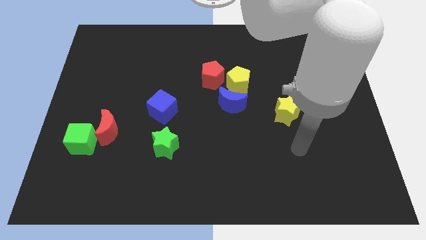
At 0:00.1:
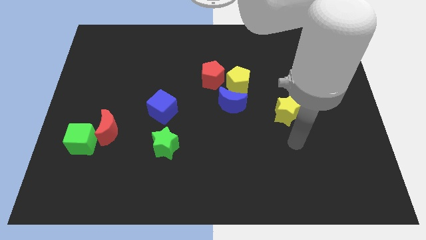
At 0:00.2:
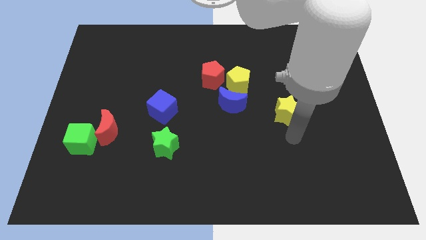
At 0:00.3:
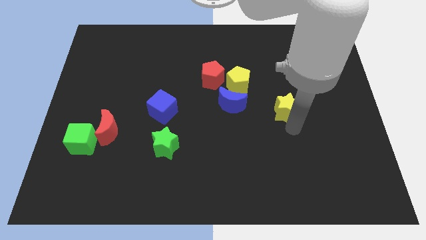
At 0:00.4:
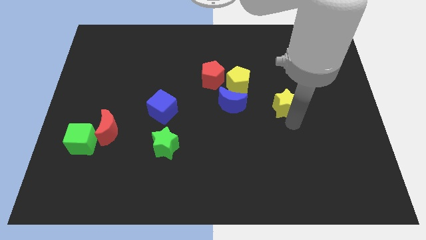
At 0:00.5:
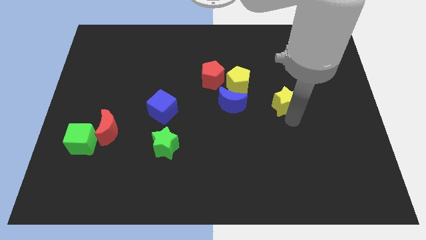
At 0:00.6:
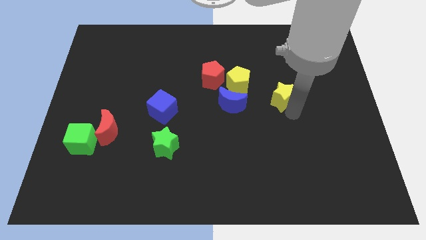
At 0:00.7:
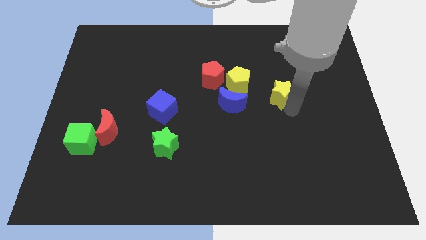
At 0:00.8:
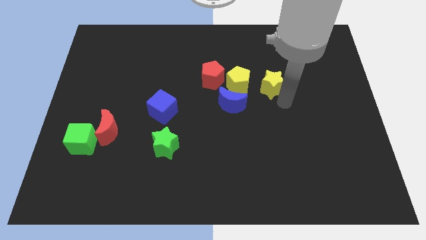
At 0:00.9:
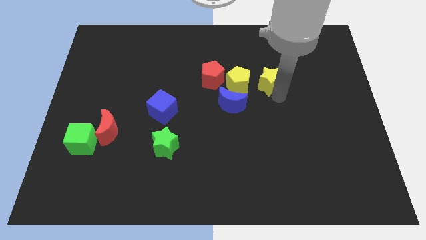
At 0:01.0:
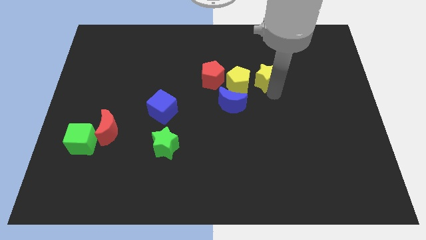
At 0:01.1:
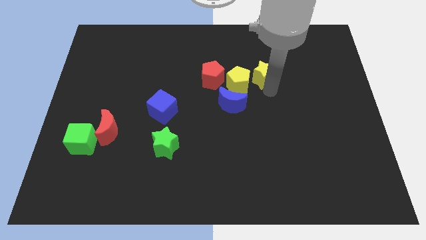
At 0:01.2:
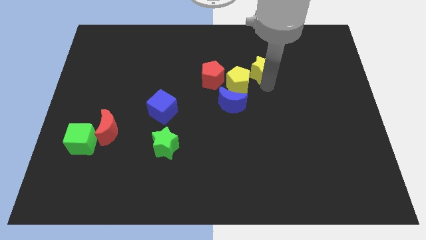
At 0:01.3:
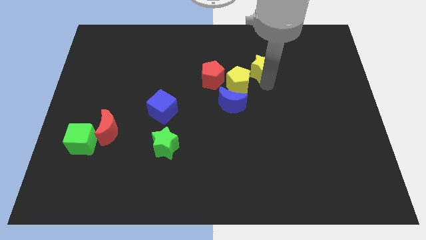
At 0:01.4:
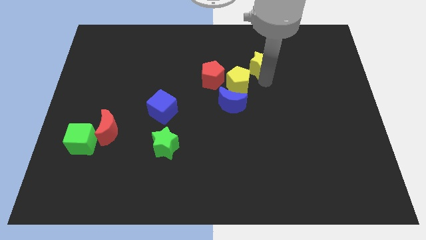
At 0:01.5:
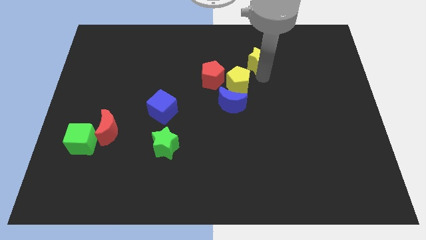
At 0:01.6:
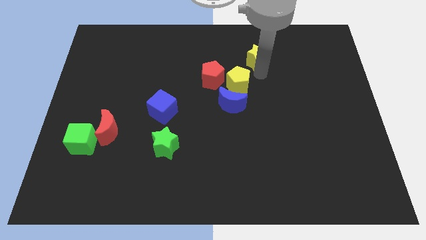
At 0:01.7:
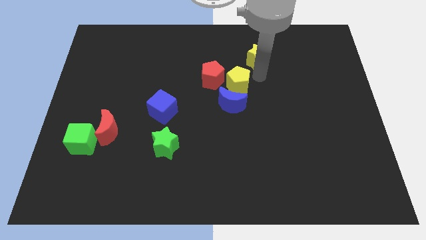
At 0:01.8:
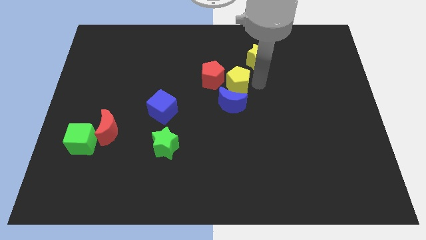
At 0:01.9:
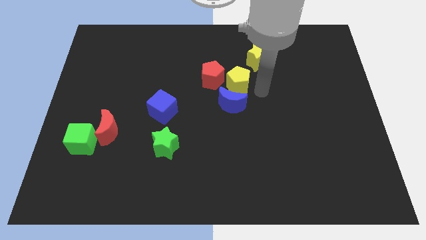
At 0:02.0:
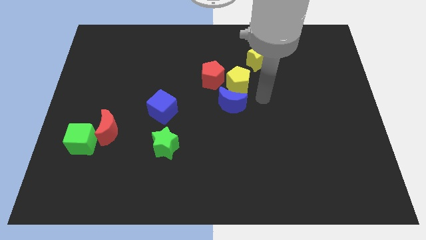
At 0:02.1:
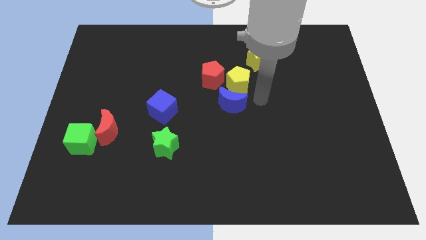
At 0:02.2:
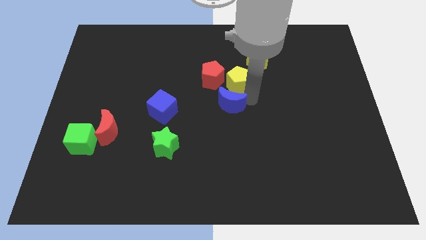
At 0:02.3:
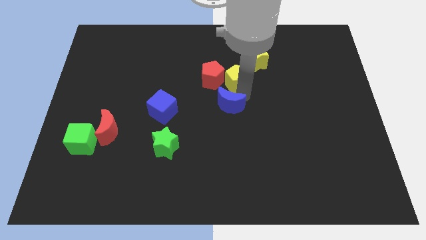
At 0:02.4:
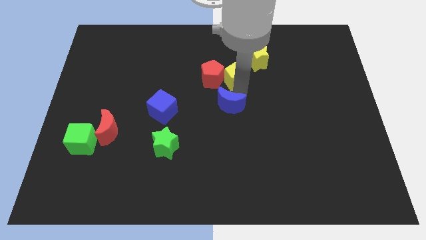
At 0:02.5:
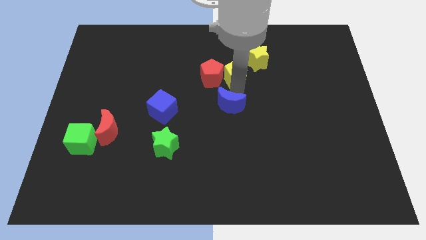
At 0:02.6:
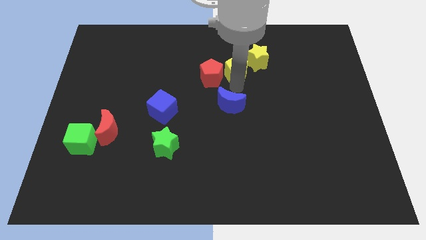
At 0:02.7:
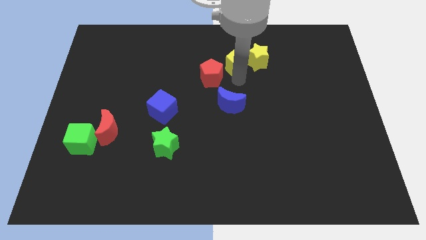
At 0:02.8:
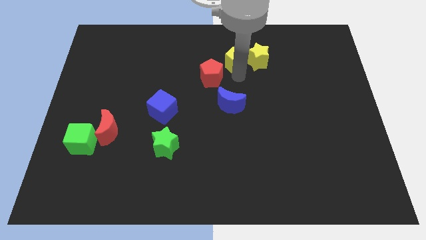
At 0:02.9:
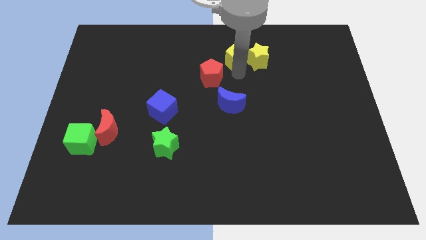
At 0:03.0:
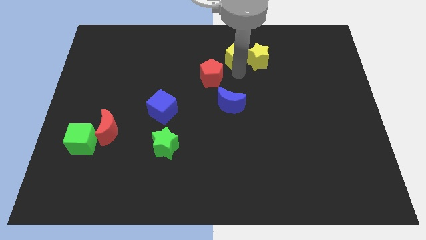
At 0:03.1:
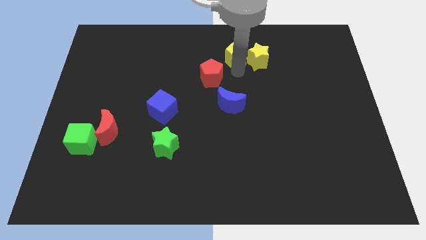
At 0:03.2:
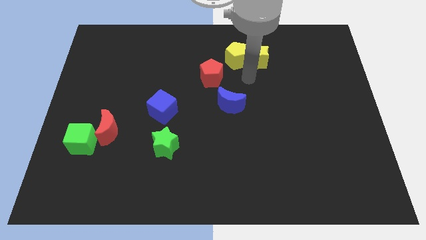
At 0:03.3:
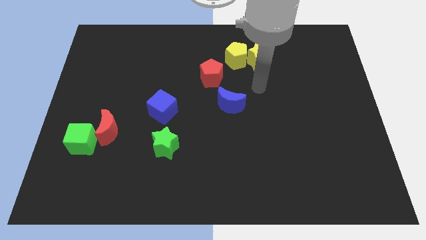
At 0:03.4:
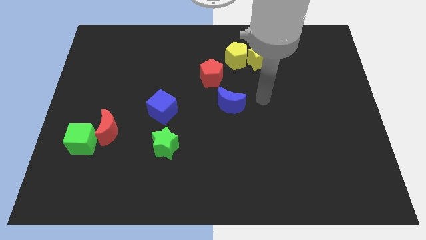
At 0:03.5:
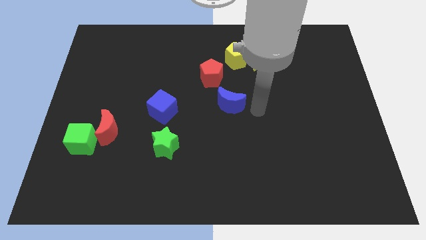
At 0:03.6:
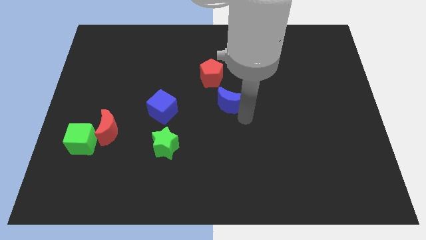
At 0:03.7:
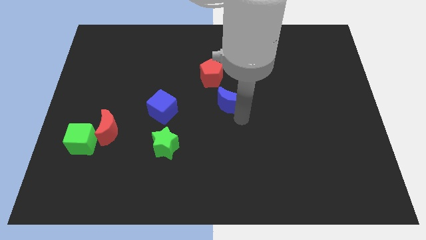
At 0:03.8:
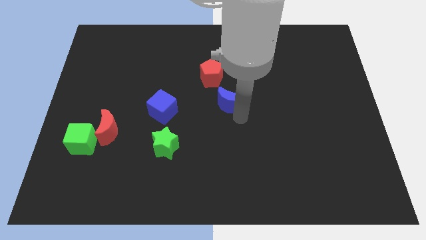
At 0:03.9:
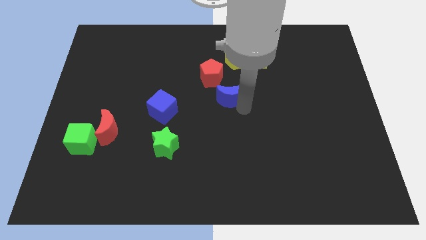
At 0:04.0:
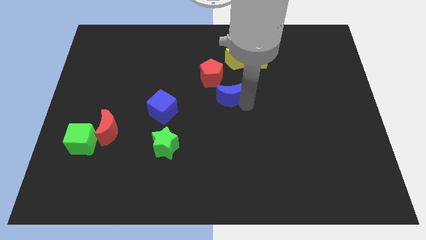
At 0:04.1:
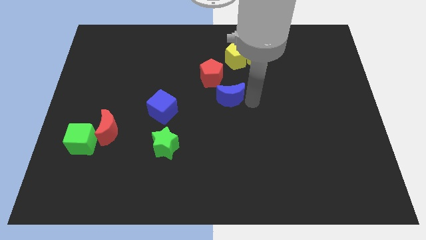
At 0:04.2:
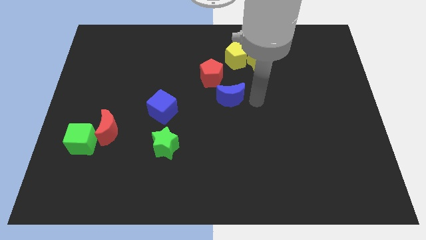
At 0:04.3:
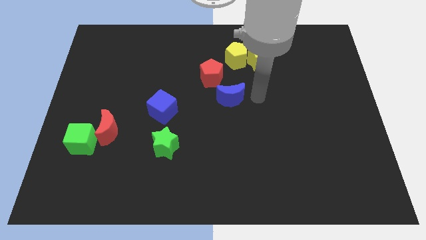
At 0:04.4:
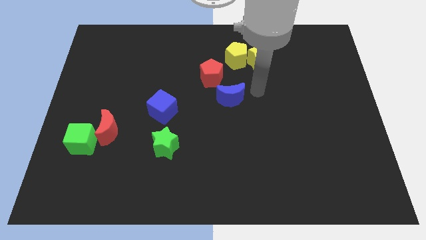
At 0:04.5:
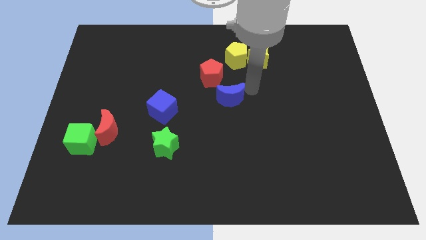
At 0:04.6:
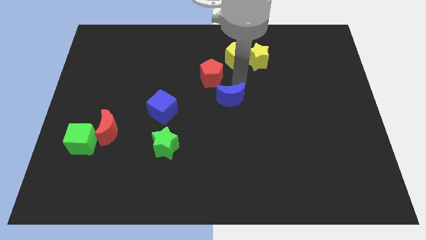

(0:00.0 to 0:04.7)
push yellow star and yellow pentagon upward

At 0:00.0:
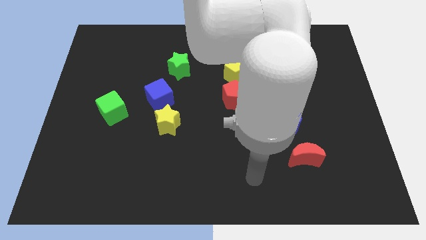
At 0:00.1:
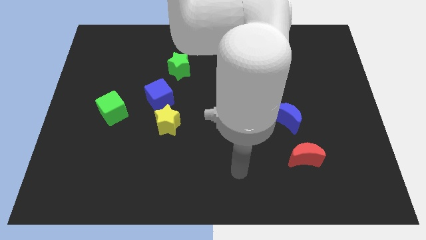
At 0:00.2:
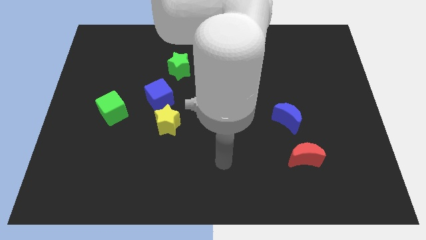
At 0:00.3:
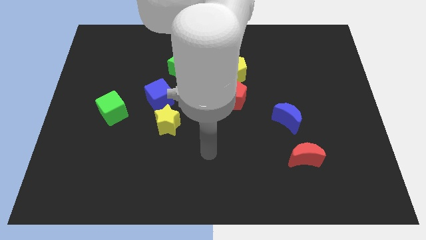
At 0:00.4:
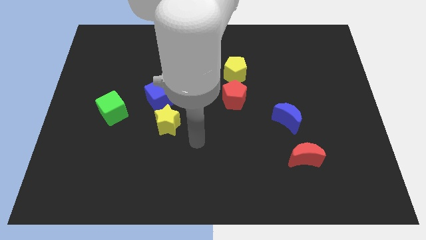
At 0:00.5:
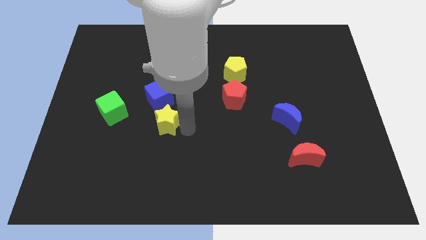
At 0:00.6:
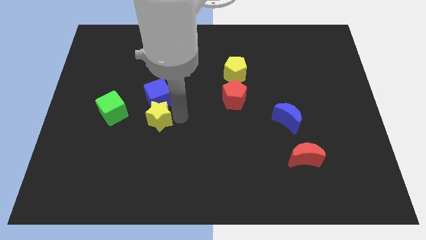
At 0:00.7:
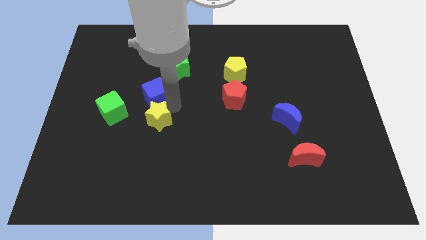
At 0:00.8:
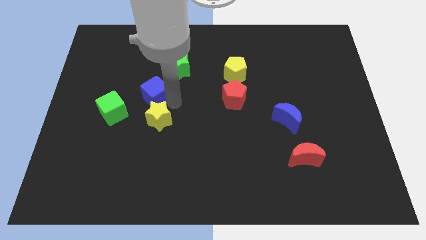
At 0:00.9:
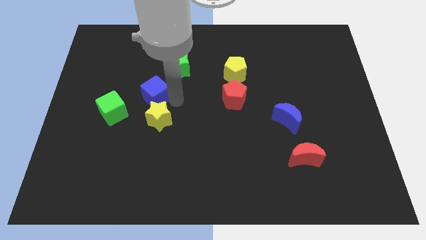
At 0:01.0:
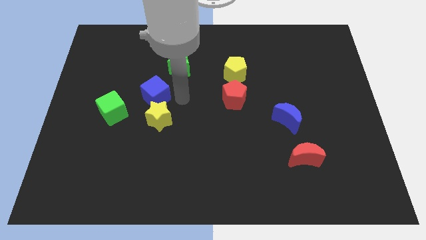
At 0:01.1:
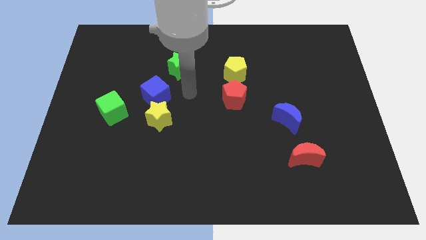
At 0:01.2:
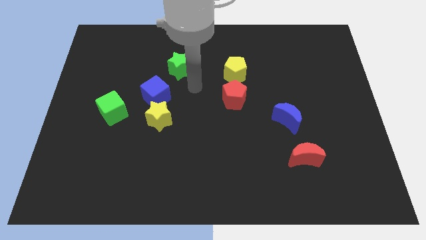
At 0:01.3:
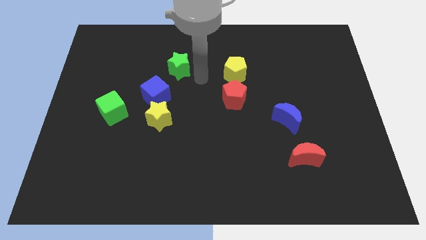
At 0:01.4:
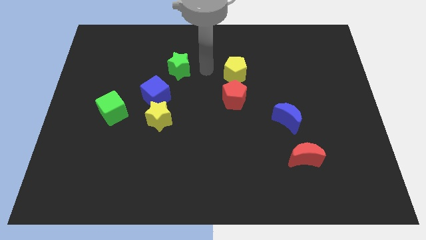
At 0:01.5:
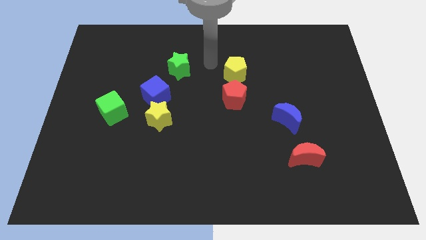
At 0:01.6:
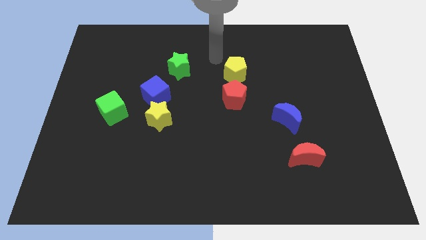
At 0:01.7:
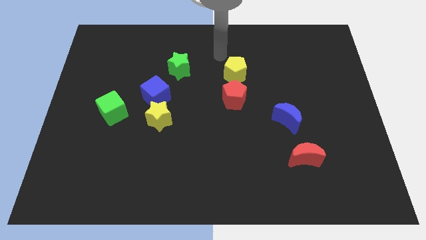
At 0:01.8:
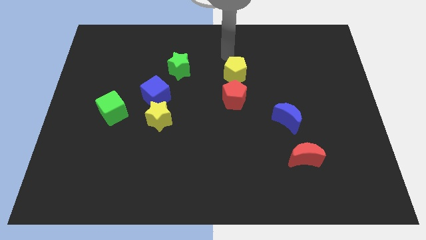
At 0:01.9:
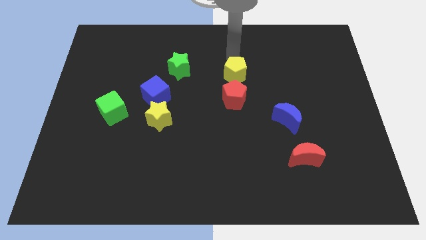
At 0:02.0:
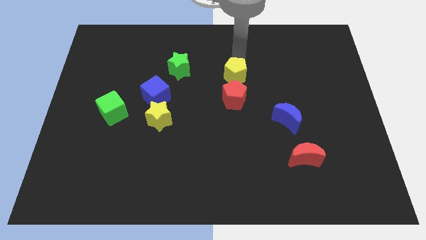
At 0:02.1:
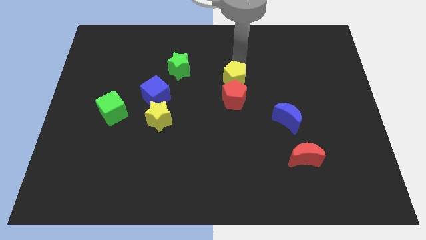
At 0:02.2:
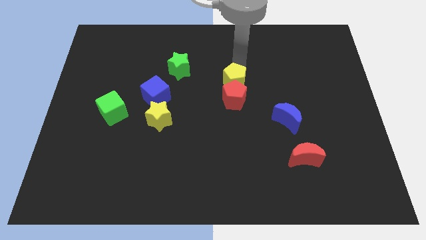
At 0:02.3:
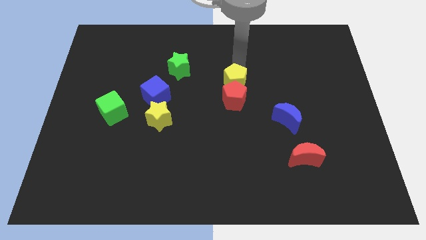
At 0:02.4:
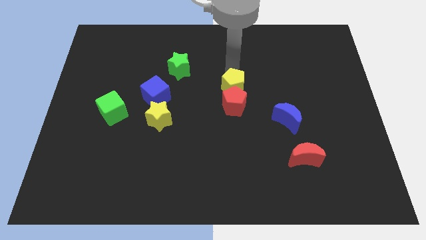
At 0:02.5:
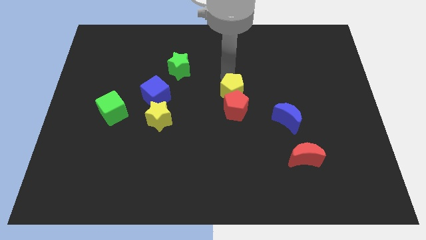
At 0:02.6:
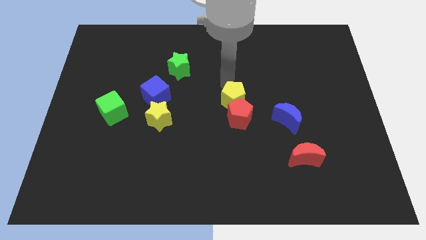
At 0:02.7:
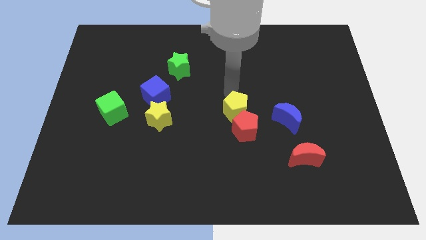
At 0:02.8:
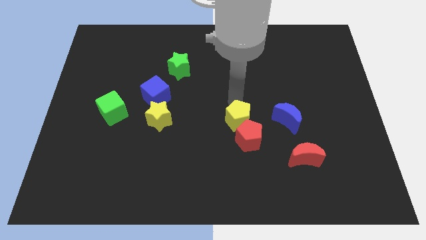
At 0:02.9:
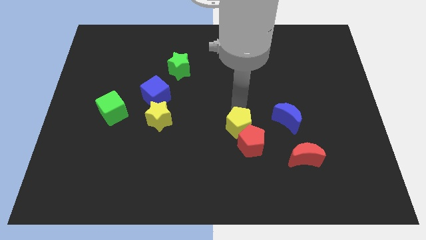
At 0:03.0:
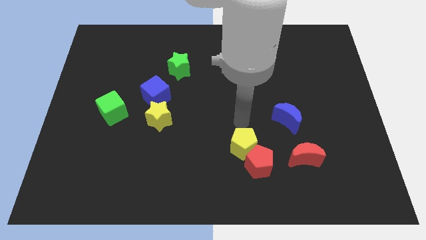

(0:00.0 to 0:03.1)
go and bring the yellow and red pentagons to the left side of the red crescent

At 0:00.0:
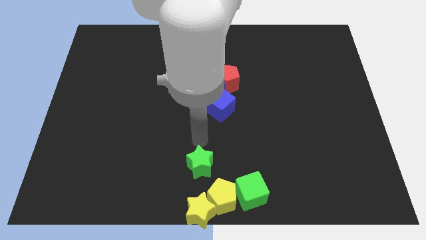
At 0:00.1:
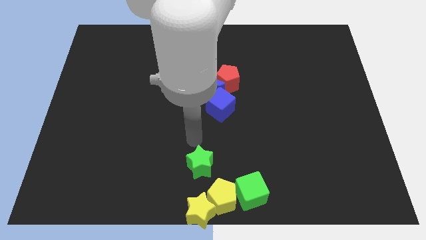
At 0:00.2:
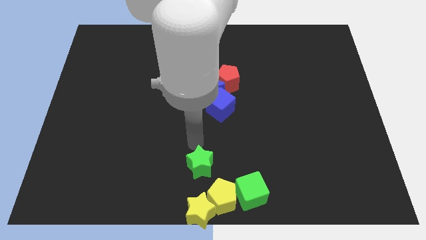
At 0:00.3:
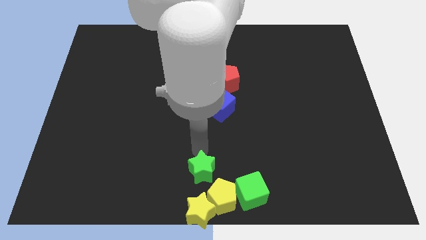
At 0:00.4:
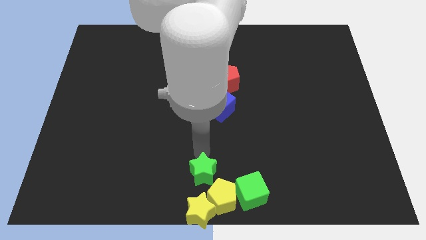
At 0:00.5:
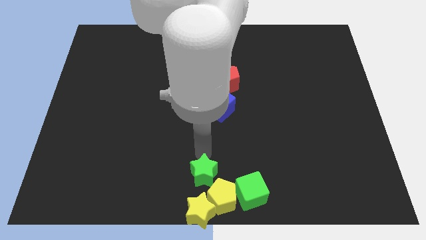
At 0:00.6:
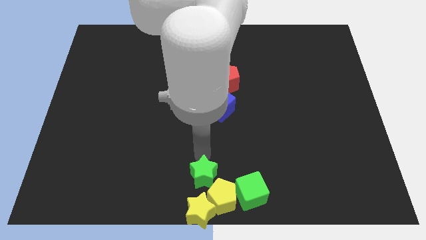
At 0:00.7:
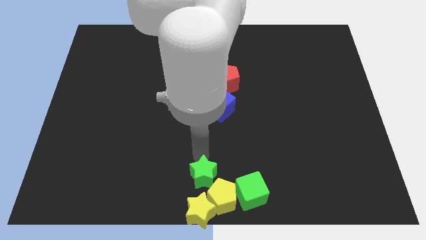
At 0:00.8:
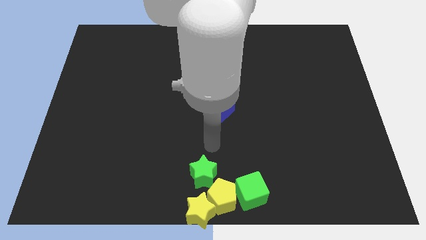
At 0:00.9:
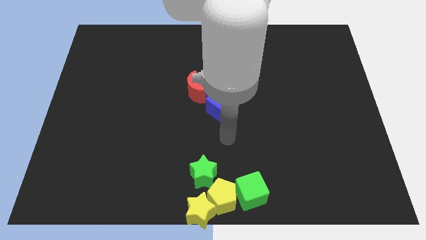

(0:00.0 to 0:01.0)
move the green star to the top of the yellow pentagon

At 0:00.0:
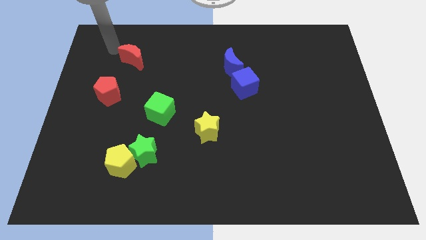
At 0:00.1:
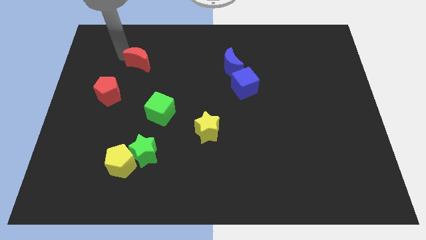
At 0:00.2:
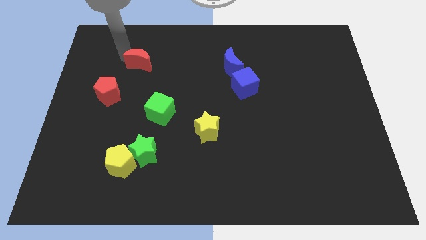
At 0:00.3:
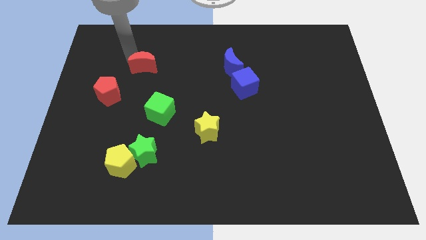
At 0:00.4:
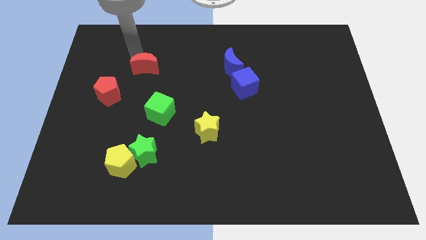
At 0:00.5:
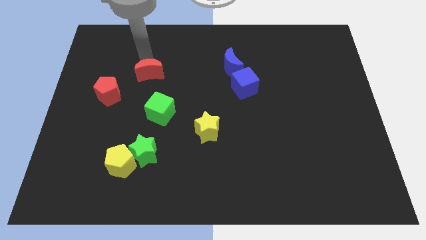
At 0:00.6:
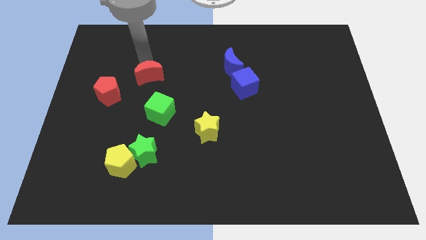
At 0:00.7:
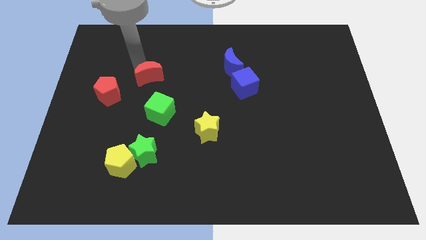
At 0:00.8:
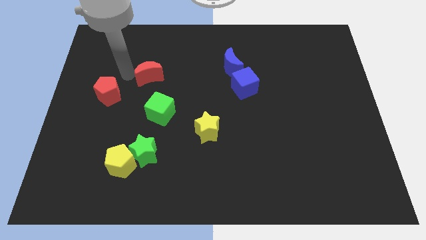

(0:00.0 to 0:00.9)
move the red crescent towards green cube
